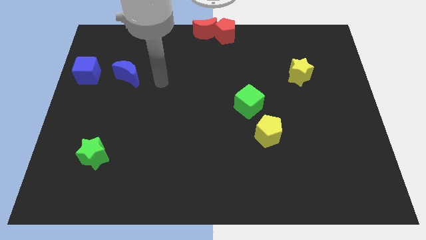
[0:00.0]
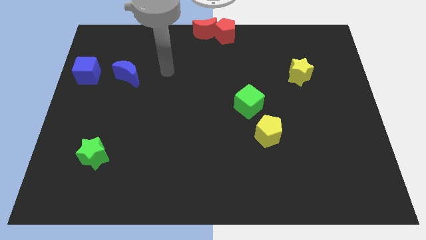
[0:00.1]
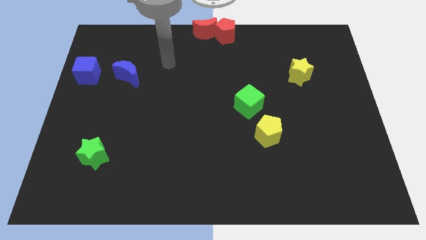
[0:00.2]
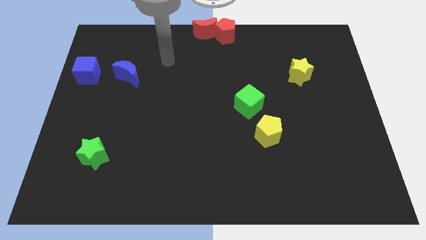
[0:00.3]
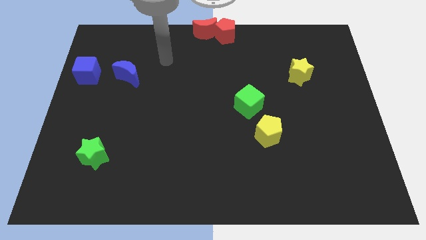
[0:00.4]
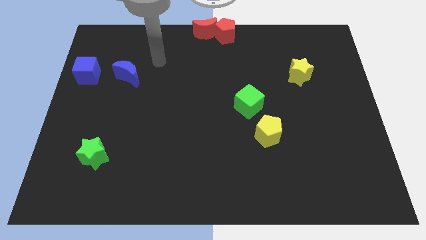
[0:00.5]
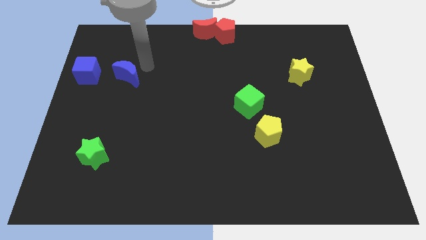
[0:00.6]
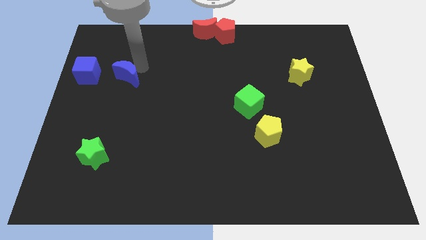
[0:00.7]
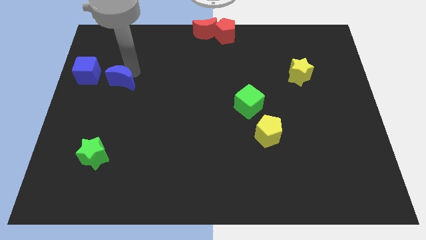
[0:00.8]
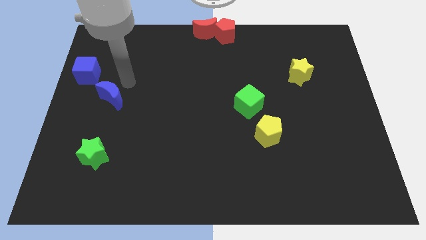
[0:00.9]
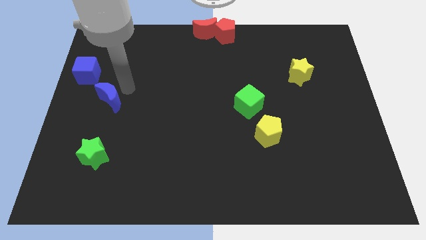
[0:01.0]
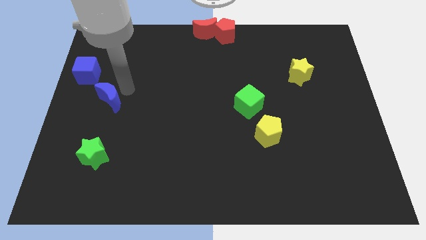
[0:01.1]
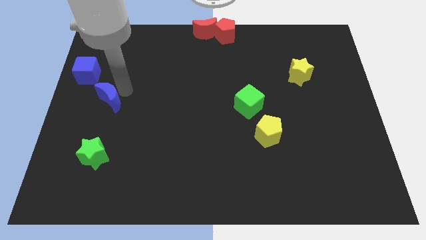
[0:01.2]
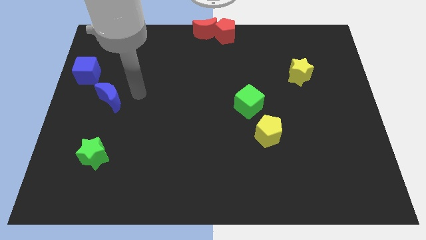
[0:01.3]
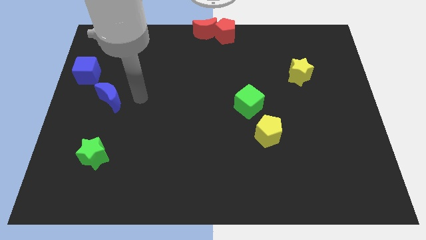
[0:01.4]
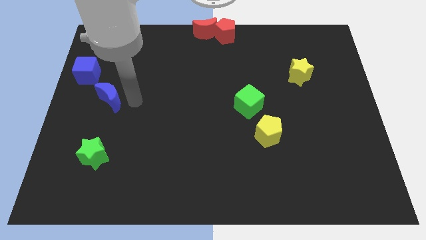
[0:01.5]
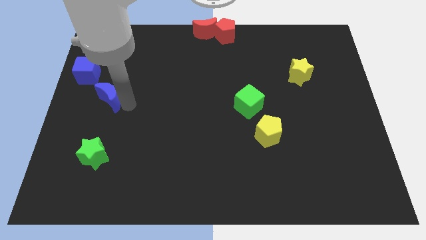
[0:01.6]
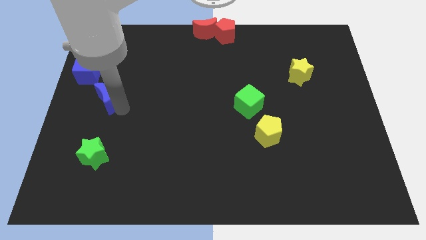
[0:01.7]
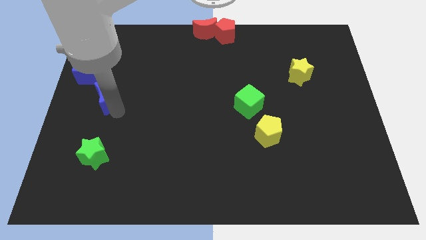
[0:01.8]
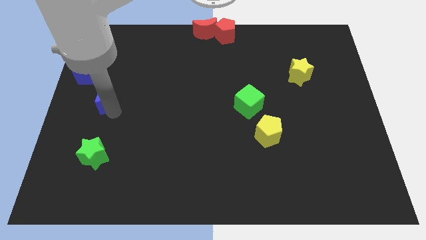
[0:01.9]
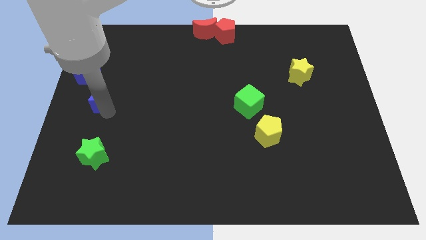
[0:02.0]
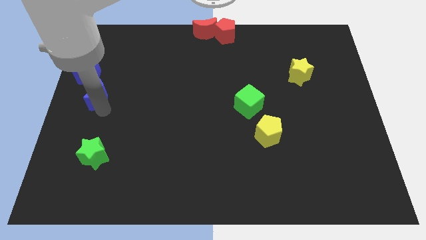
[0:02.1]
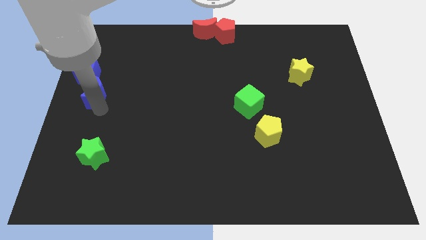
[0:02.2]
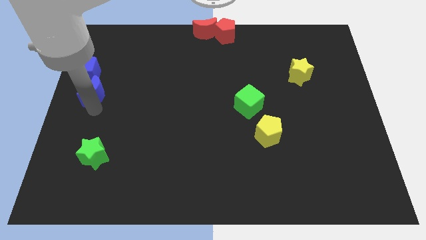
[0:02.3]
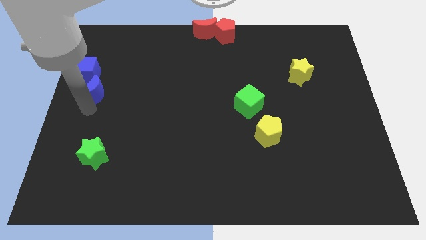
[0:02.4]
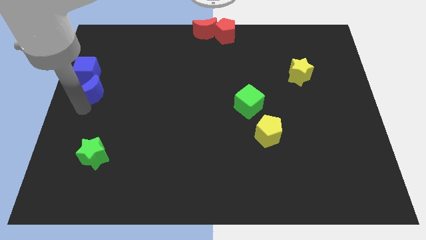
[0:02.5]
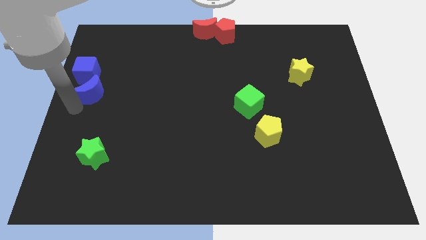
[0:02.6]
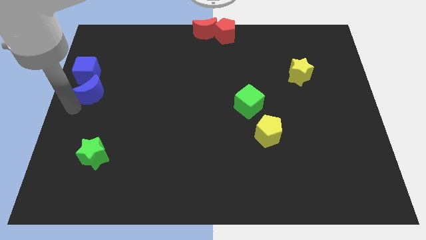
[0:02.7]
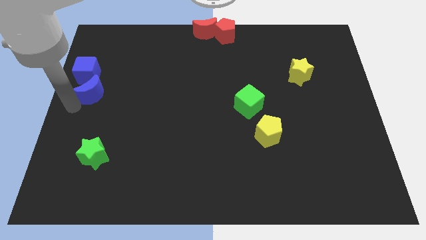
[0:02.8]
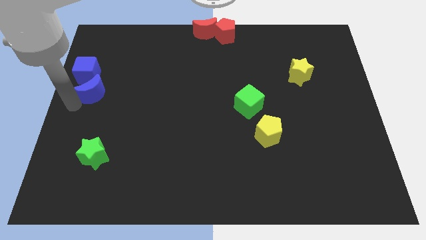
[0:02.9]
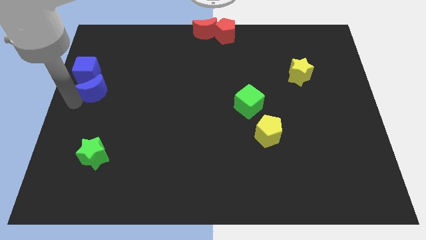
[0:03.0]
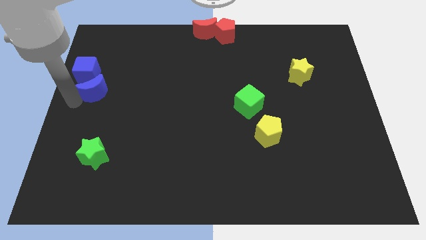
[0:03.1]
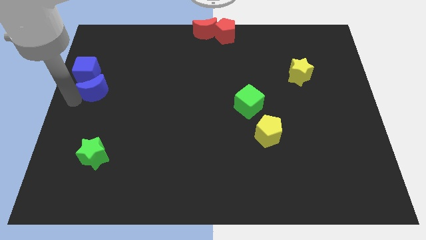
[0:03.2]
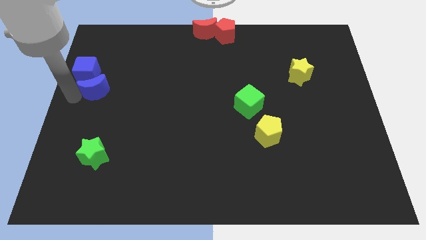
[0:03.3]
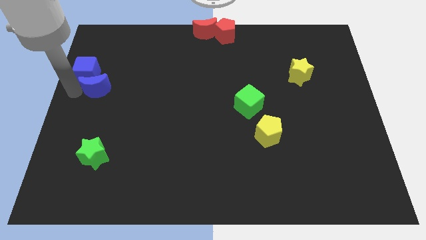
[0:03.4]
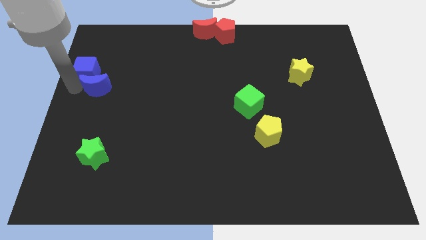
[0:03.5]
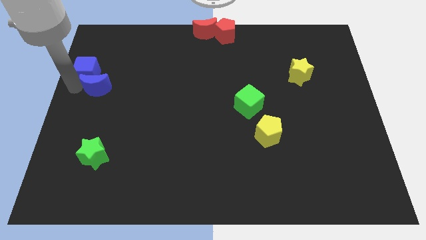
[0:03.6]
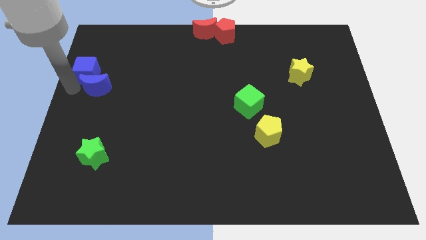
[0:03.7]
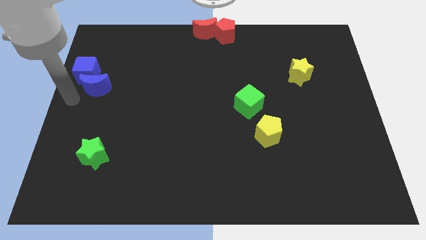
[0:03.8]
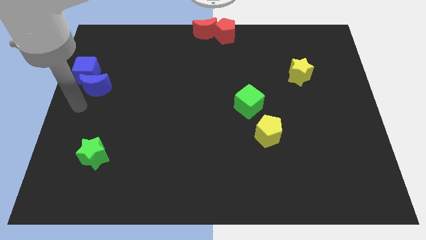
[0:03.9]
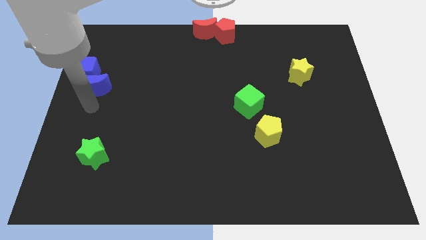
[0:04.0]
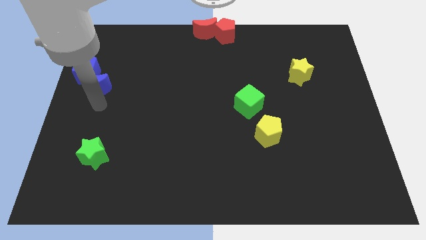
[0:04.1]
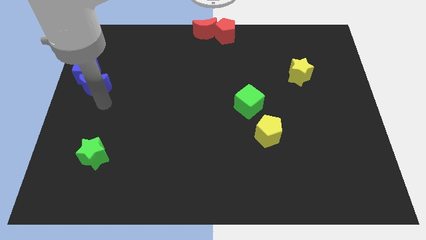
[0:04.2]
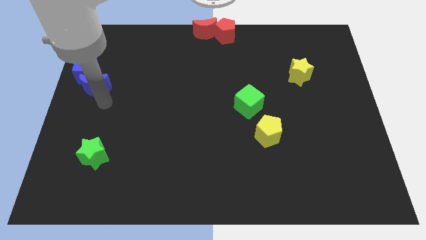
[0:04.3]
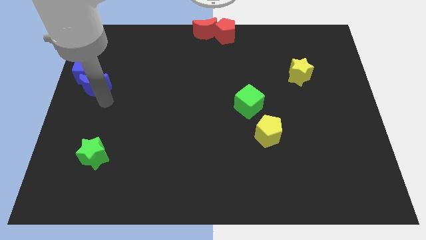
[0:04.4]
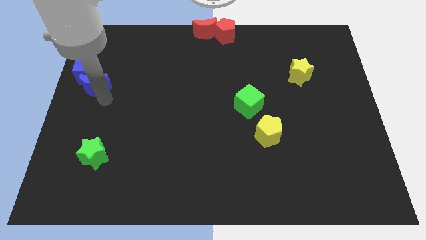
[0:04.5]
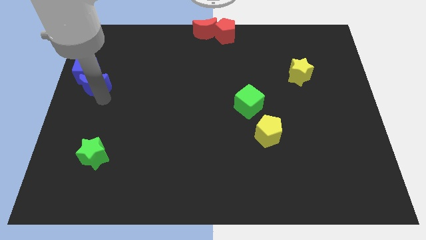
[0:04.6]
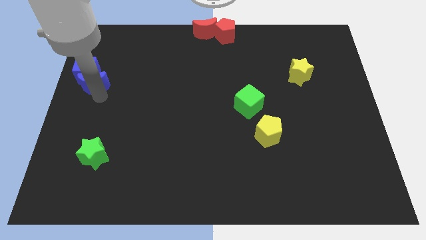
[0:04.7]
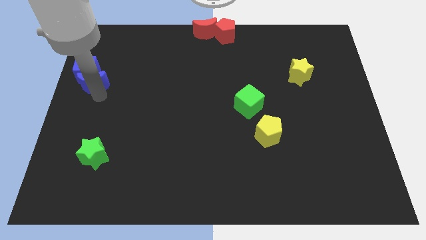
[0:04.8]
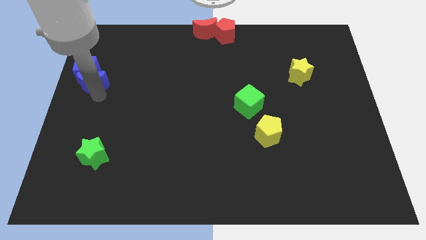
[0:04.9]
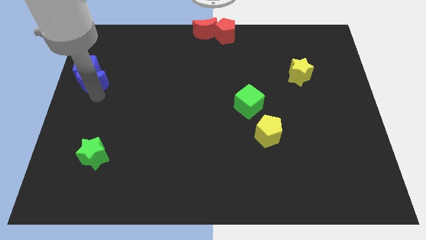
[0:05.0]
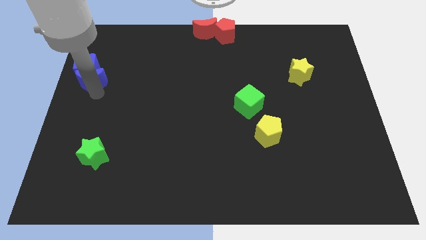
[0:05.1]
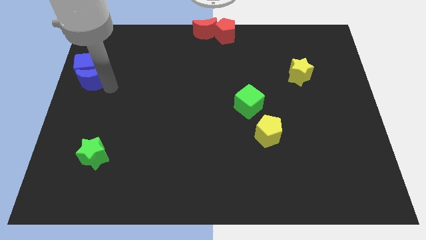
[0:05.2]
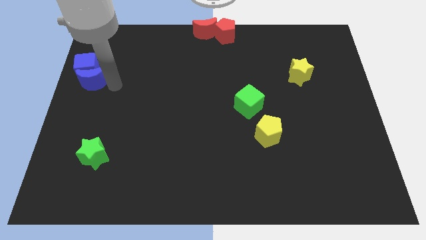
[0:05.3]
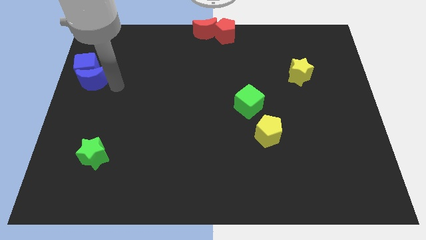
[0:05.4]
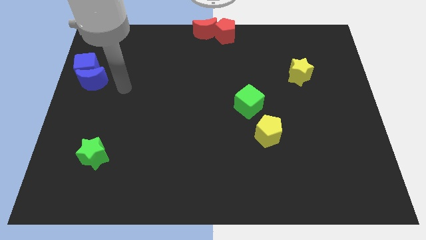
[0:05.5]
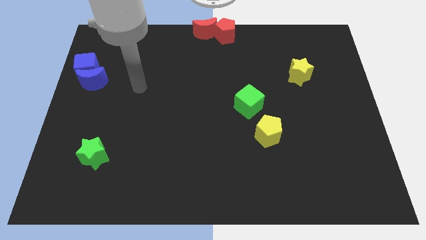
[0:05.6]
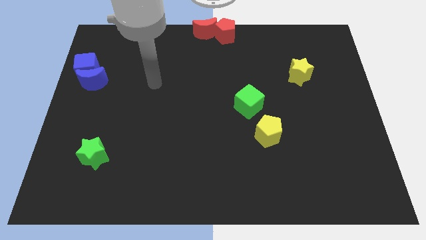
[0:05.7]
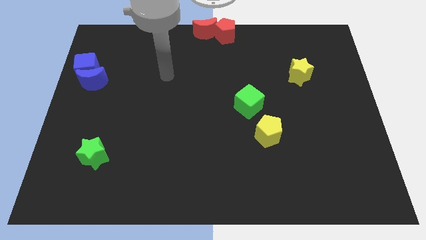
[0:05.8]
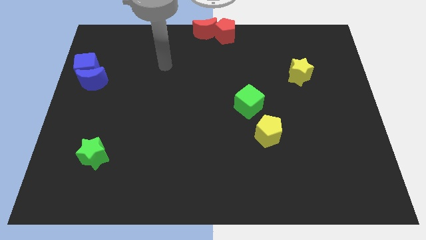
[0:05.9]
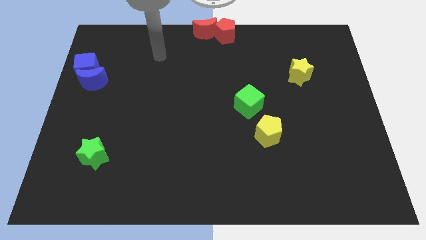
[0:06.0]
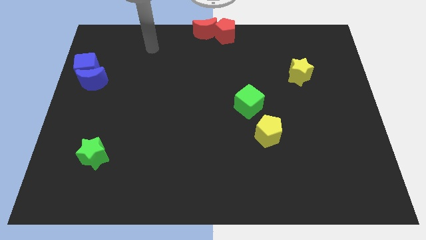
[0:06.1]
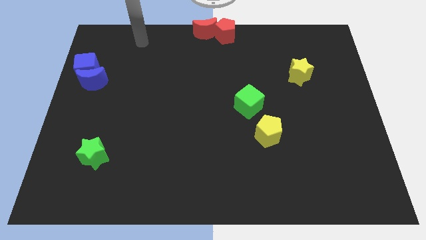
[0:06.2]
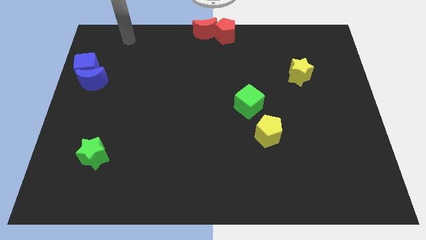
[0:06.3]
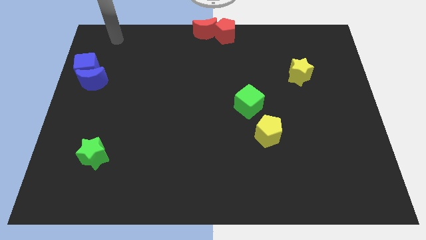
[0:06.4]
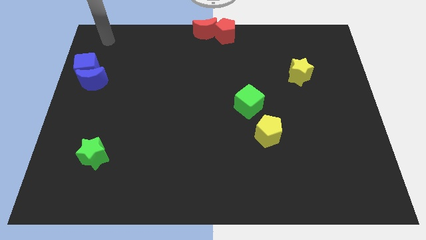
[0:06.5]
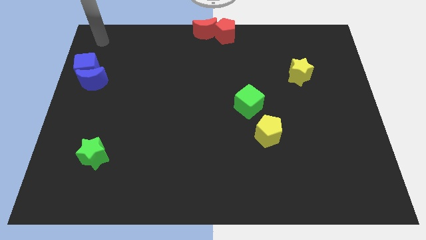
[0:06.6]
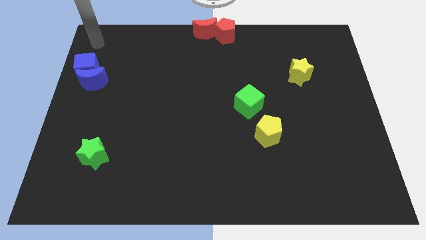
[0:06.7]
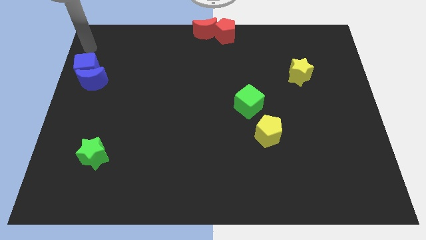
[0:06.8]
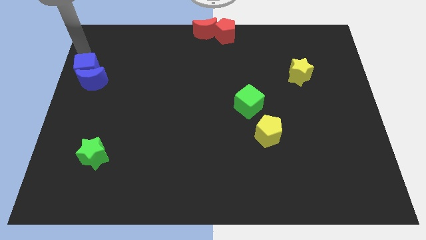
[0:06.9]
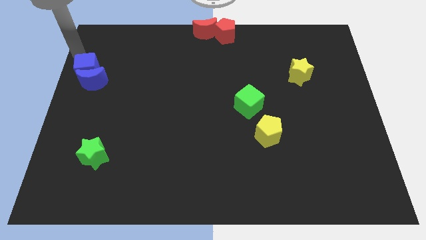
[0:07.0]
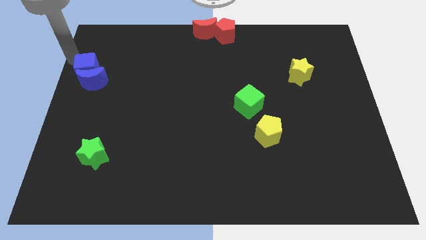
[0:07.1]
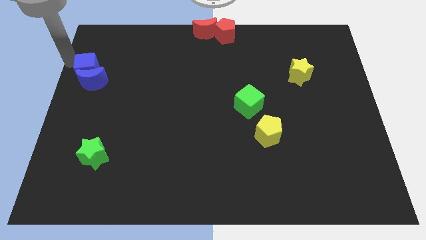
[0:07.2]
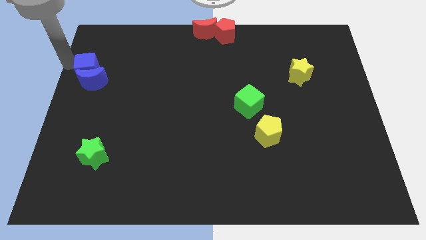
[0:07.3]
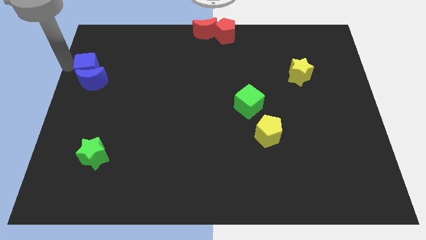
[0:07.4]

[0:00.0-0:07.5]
move the blue moon into blue cube

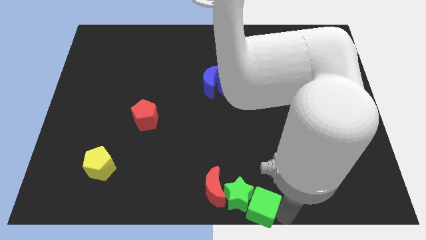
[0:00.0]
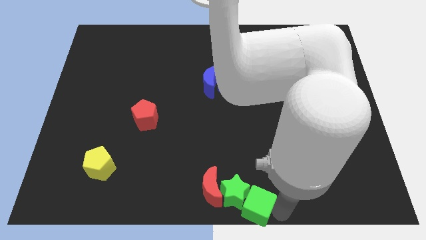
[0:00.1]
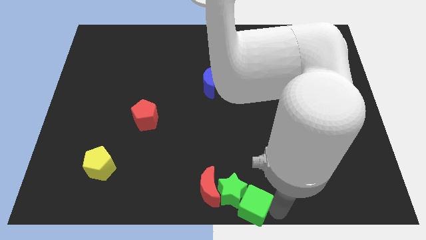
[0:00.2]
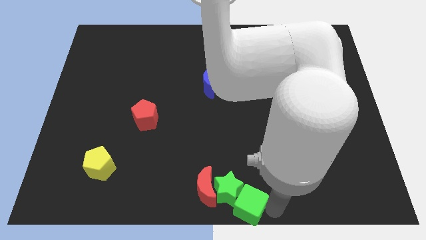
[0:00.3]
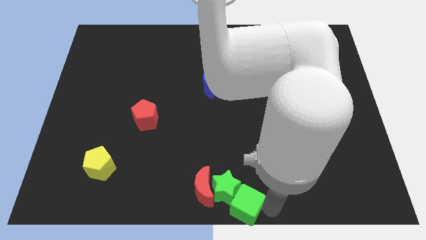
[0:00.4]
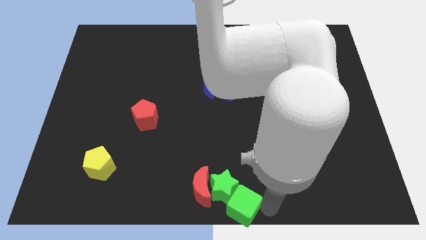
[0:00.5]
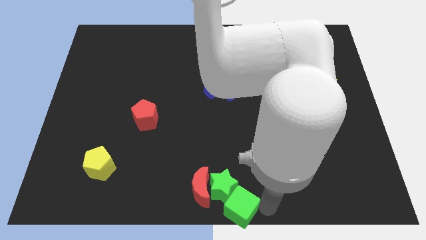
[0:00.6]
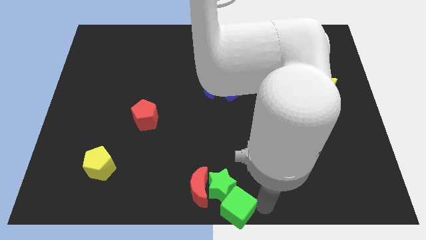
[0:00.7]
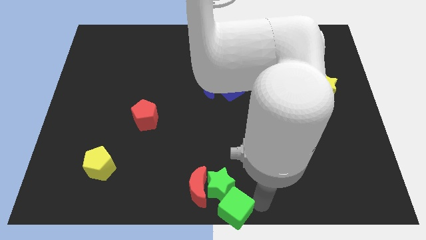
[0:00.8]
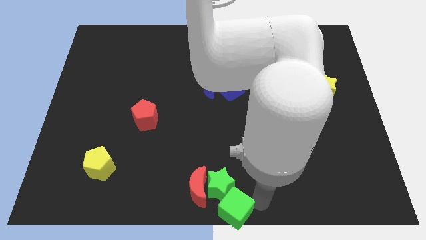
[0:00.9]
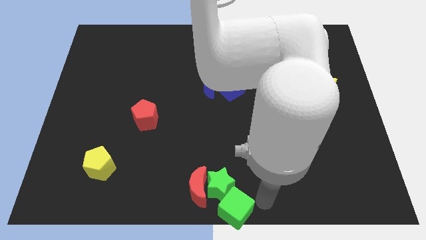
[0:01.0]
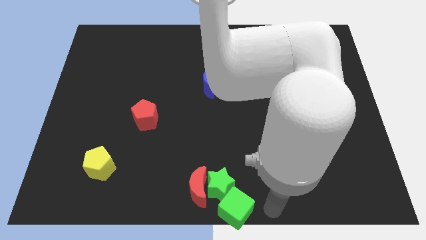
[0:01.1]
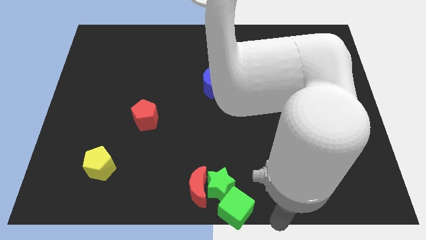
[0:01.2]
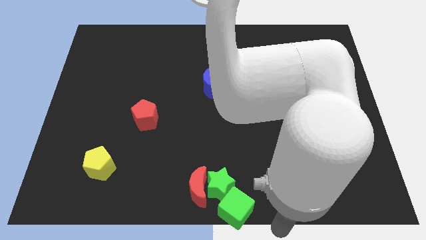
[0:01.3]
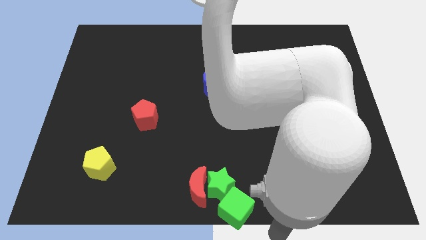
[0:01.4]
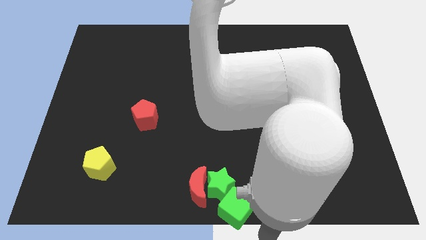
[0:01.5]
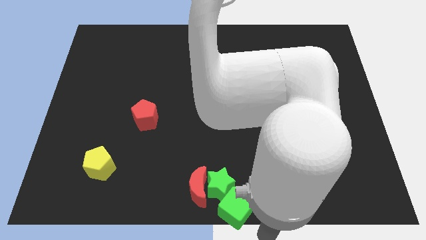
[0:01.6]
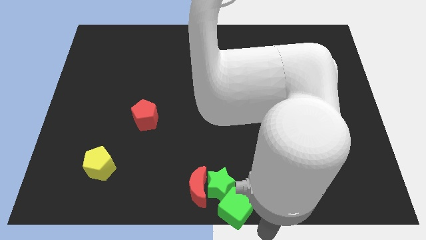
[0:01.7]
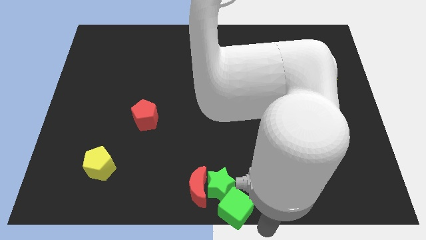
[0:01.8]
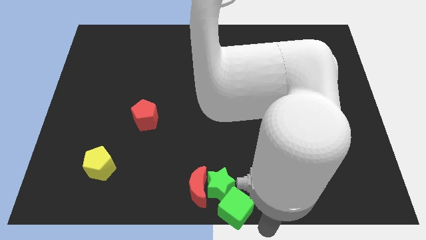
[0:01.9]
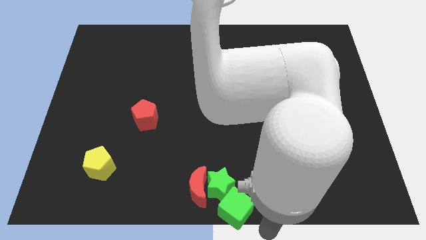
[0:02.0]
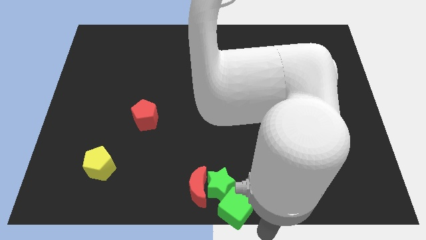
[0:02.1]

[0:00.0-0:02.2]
push red crescent green star with the green cube towards the bottom center of the board
